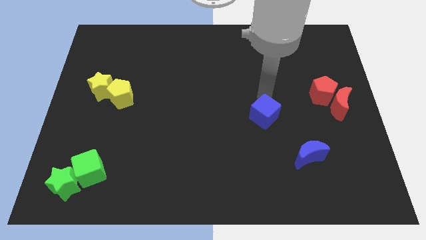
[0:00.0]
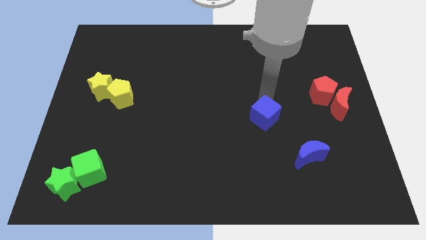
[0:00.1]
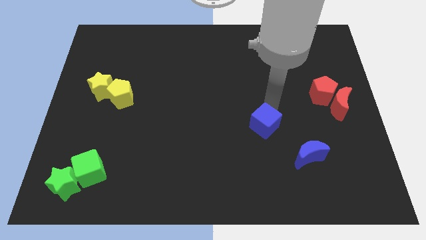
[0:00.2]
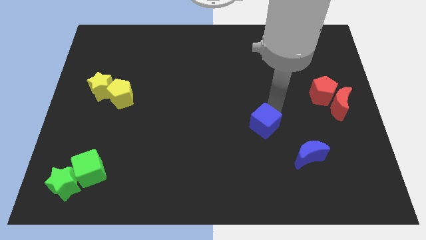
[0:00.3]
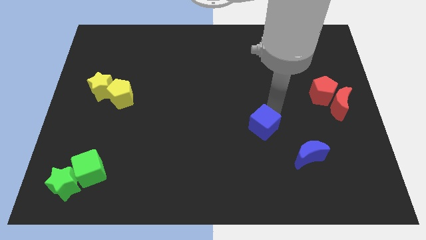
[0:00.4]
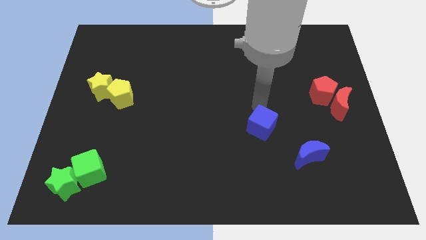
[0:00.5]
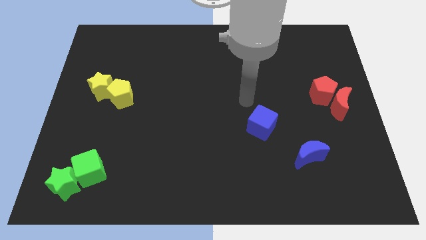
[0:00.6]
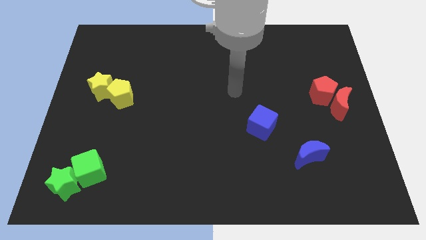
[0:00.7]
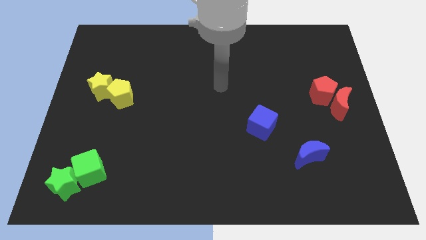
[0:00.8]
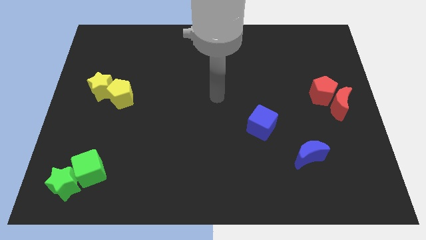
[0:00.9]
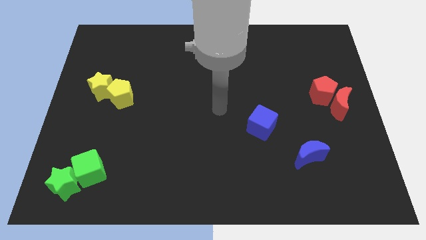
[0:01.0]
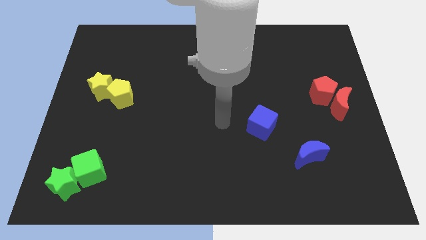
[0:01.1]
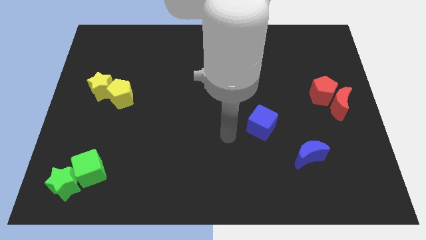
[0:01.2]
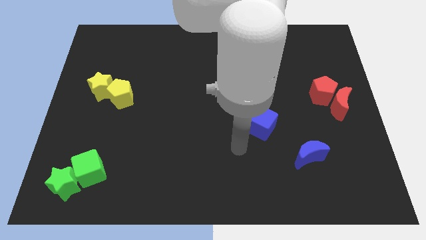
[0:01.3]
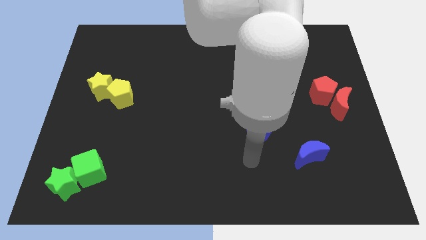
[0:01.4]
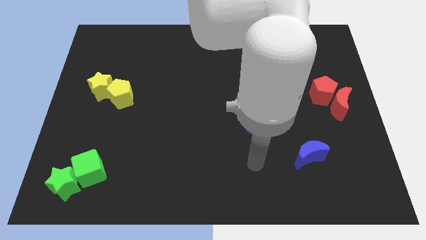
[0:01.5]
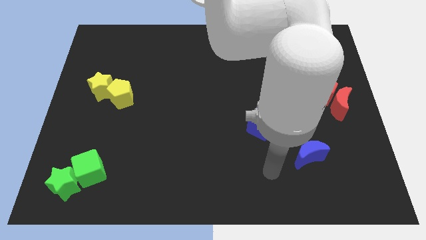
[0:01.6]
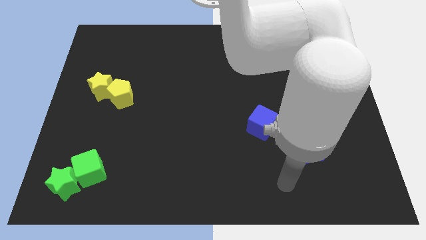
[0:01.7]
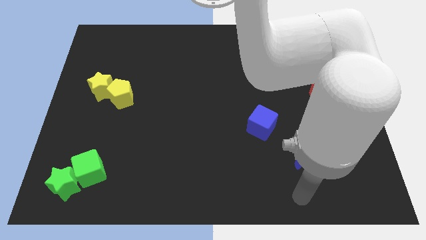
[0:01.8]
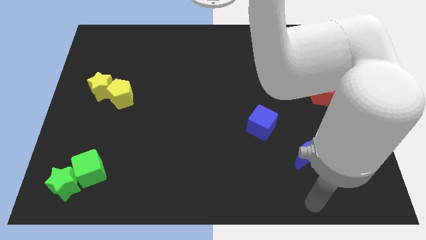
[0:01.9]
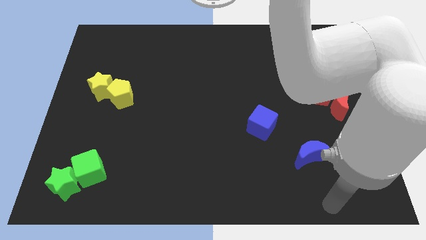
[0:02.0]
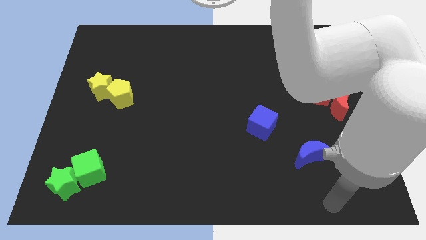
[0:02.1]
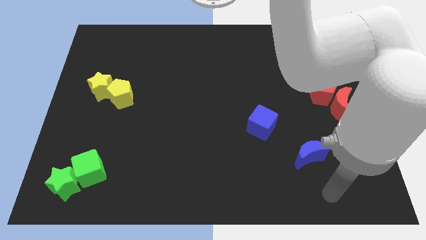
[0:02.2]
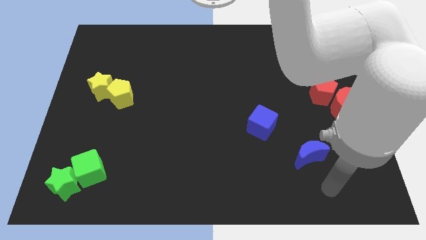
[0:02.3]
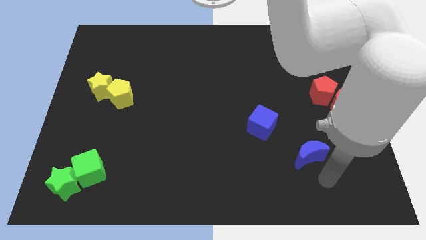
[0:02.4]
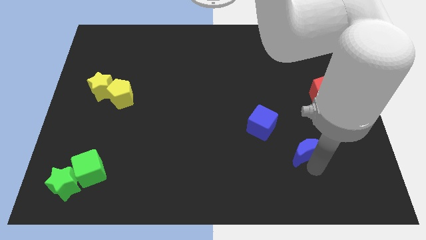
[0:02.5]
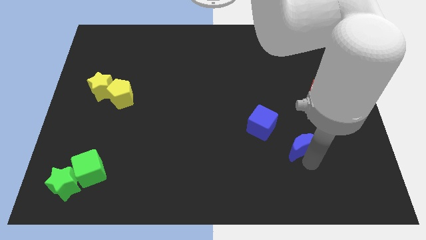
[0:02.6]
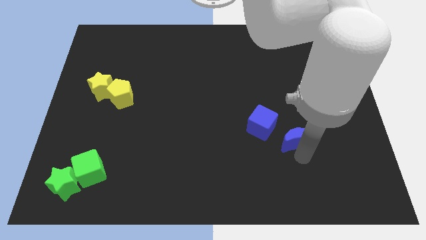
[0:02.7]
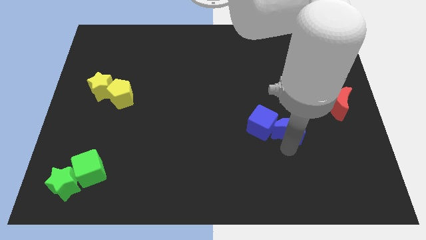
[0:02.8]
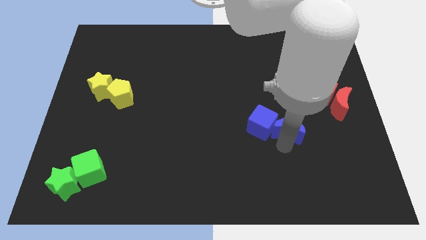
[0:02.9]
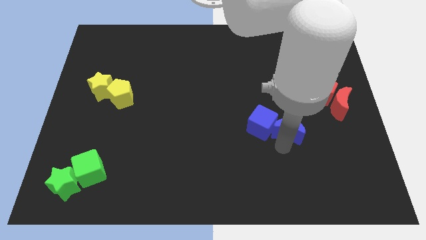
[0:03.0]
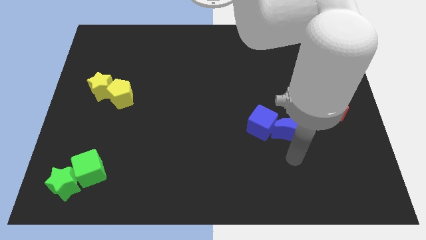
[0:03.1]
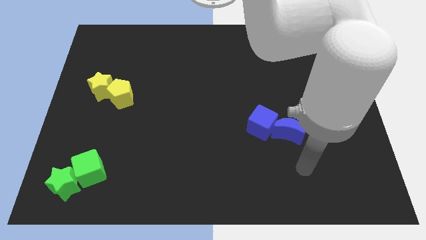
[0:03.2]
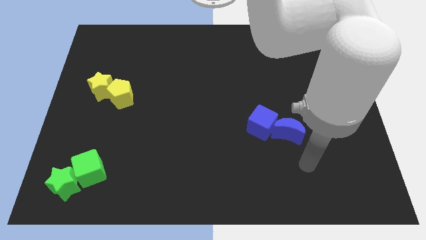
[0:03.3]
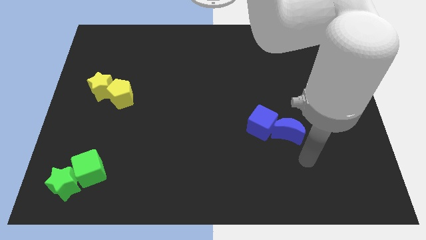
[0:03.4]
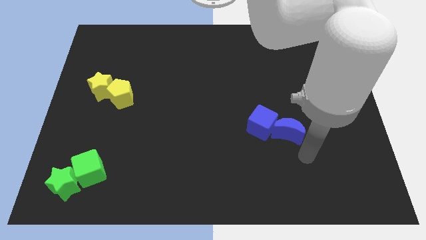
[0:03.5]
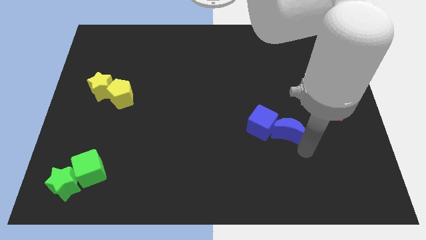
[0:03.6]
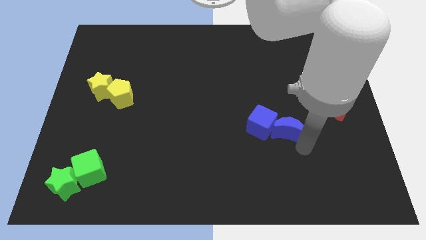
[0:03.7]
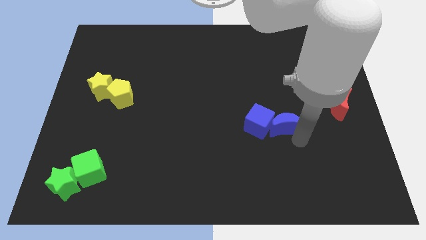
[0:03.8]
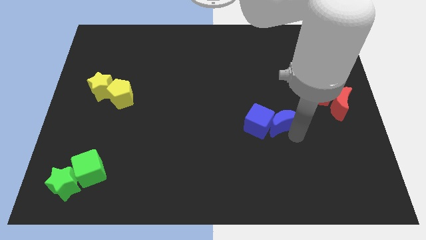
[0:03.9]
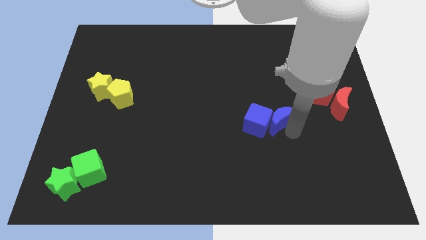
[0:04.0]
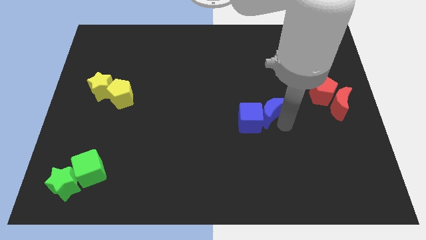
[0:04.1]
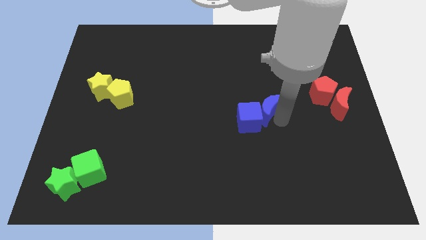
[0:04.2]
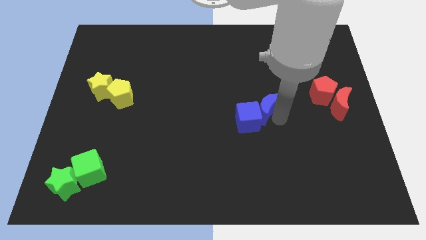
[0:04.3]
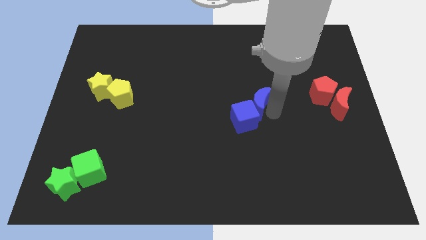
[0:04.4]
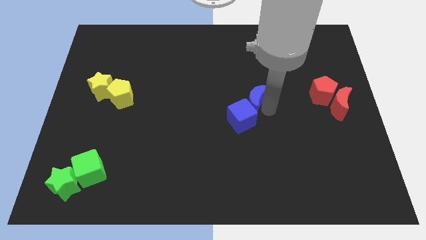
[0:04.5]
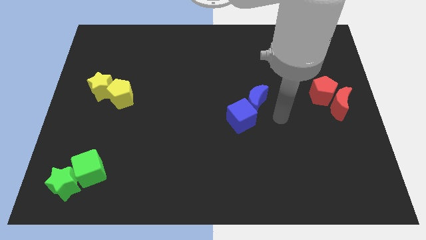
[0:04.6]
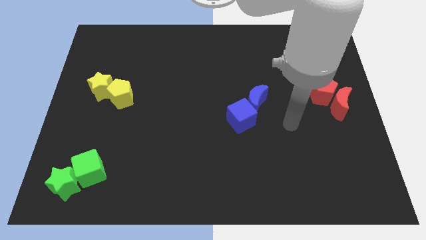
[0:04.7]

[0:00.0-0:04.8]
push the blue crescent into the blue cube

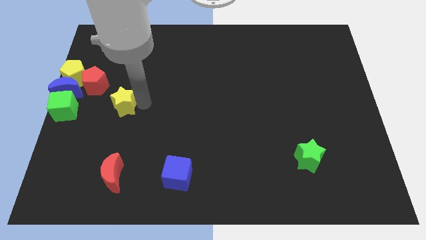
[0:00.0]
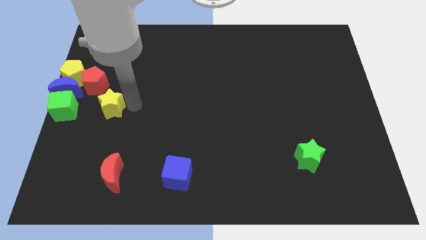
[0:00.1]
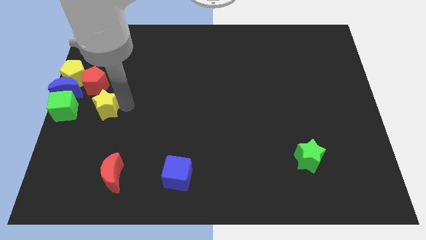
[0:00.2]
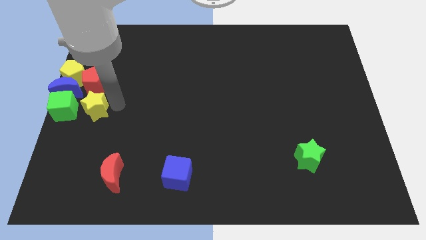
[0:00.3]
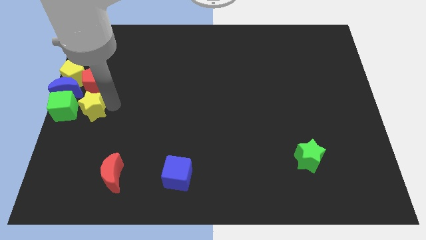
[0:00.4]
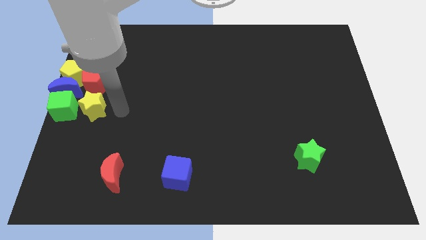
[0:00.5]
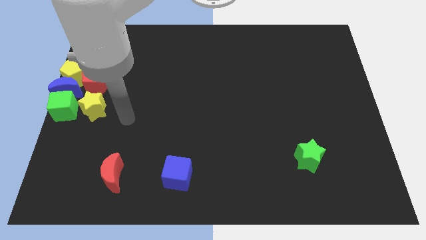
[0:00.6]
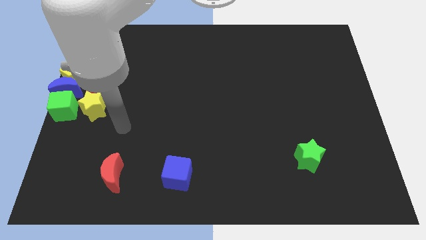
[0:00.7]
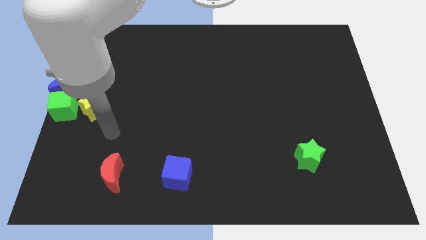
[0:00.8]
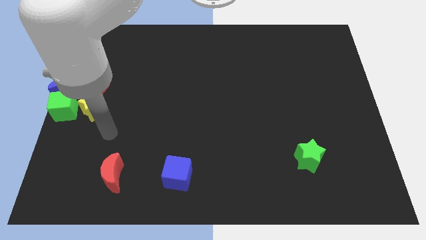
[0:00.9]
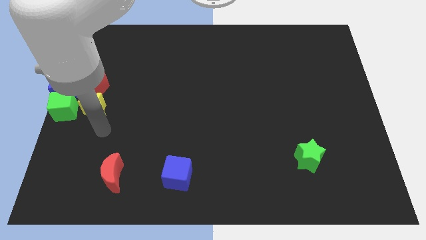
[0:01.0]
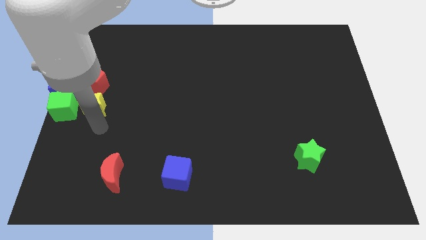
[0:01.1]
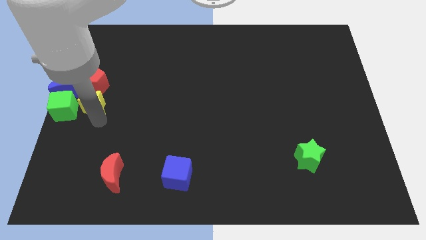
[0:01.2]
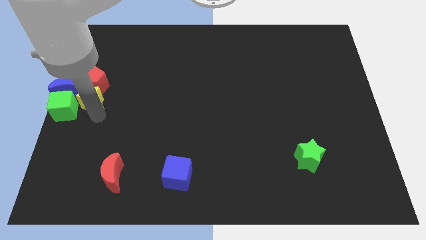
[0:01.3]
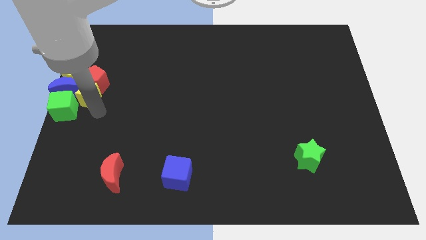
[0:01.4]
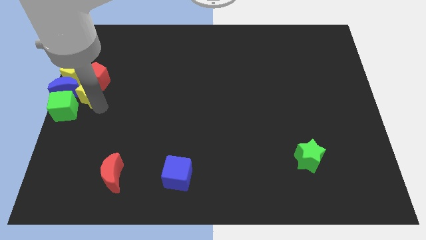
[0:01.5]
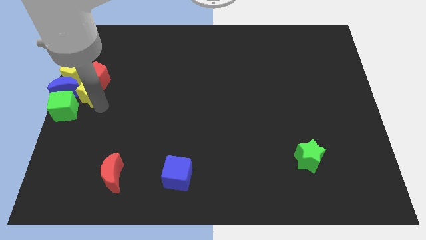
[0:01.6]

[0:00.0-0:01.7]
place the yellow star below the red pentagon

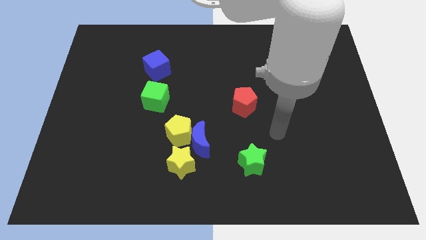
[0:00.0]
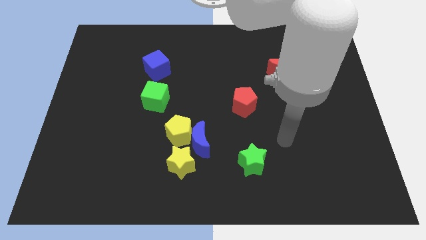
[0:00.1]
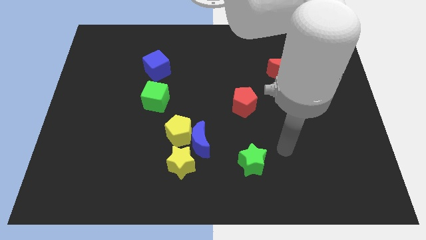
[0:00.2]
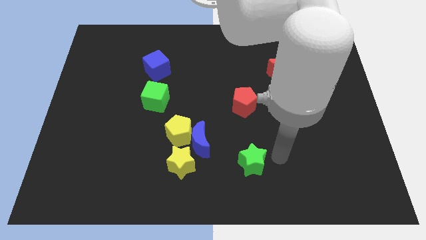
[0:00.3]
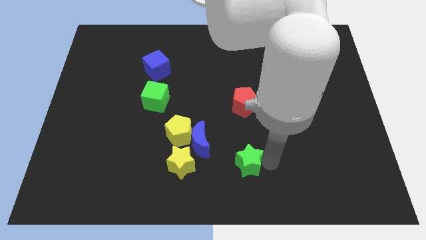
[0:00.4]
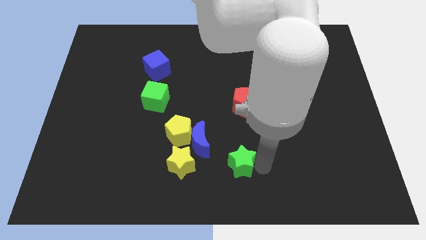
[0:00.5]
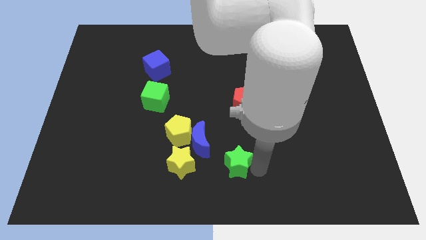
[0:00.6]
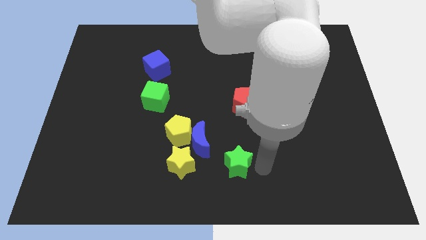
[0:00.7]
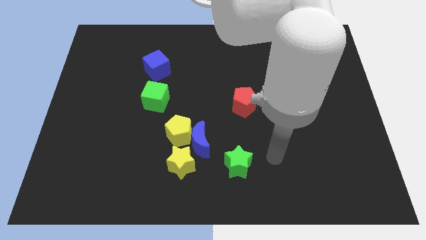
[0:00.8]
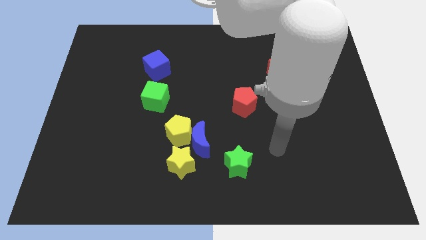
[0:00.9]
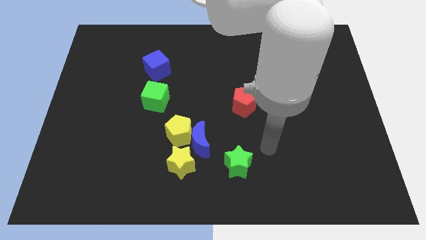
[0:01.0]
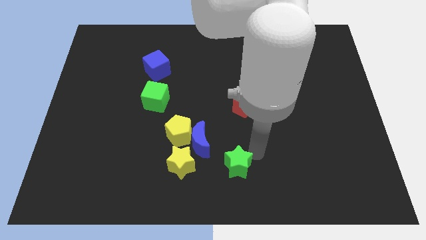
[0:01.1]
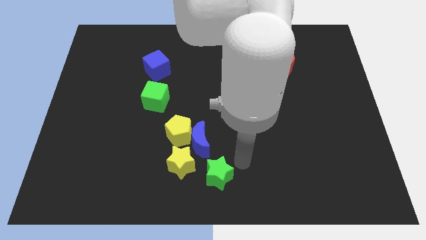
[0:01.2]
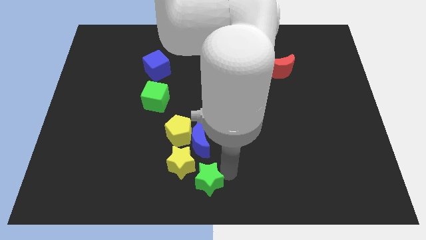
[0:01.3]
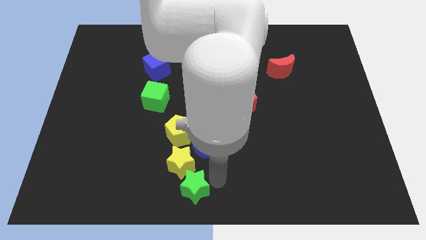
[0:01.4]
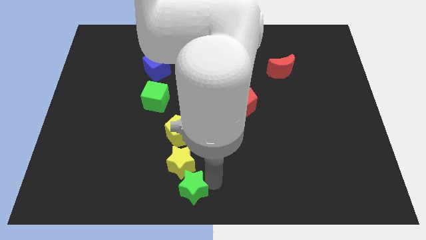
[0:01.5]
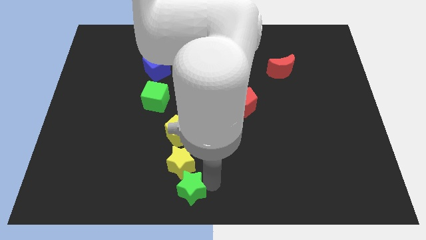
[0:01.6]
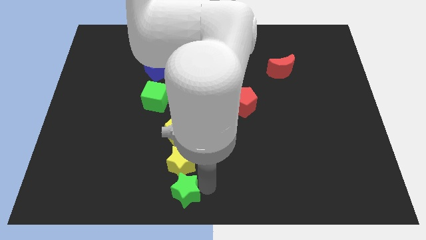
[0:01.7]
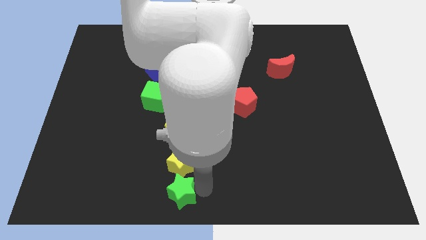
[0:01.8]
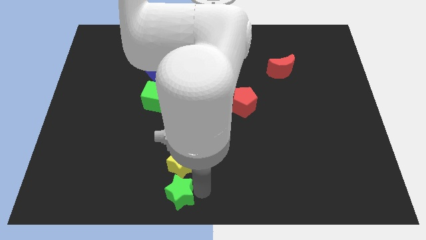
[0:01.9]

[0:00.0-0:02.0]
put the green star vertically below the yellow star

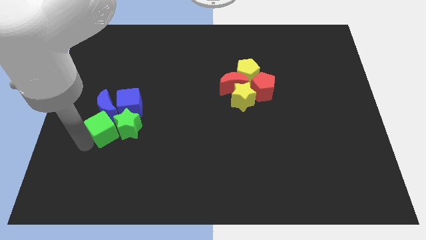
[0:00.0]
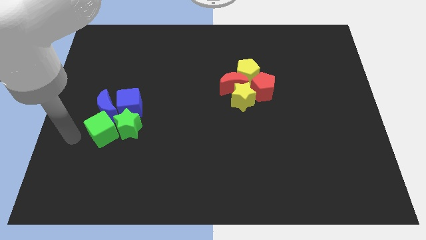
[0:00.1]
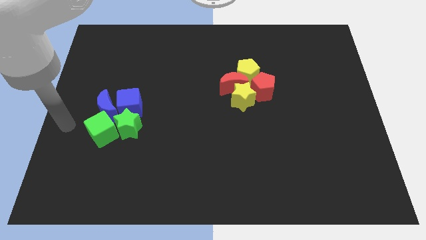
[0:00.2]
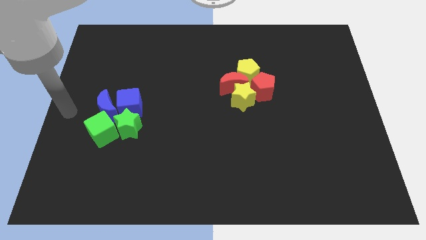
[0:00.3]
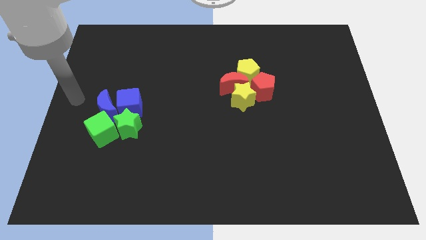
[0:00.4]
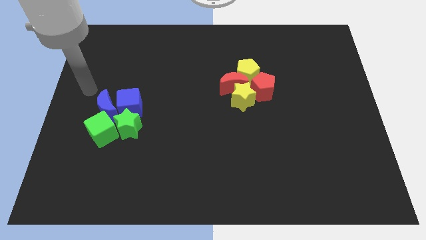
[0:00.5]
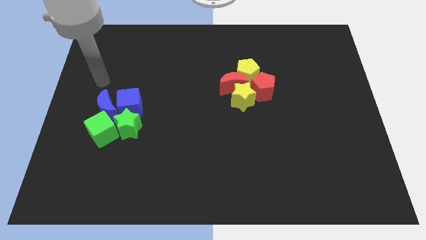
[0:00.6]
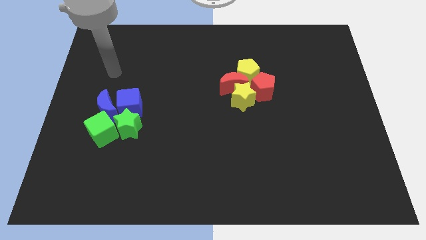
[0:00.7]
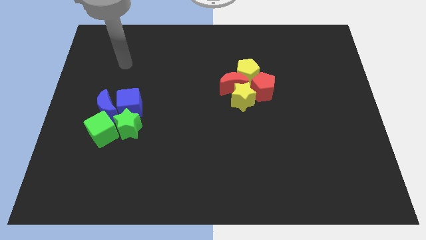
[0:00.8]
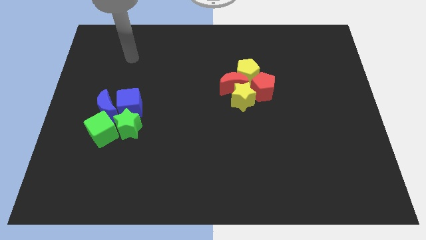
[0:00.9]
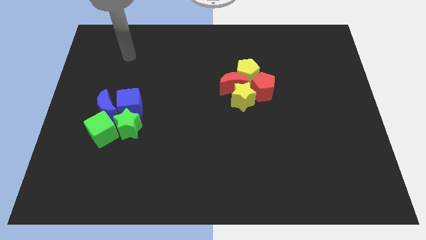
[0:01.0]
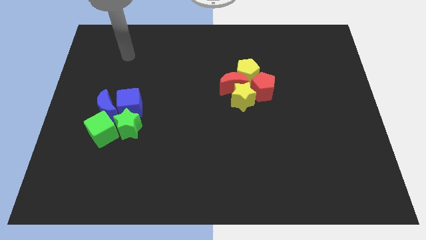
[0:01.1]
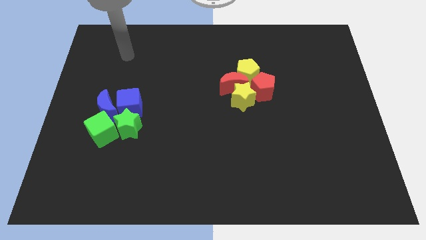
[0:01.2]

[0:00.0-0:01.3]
move away from the green cube
